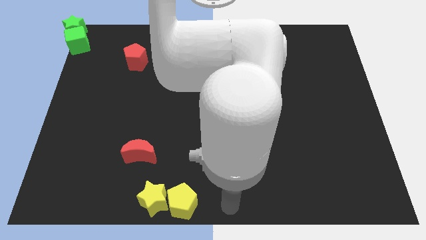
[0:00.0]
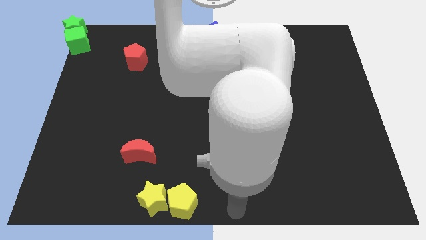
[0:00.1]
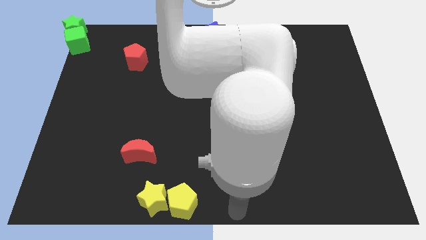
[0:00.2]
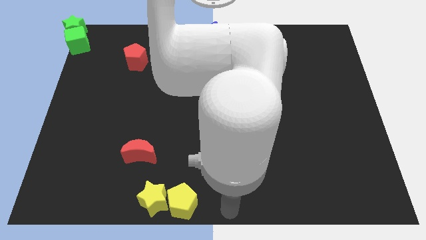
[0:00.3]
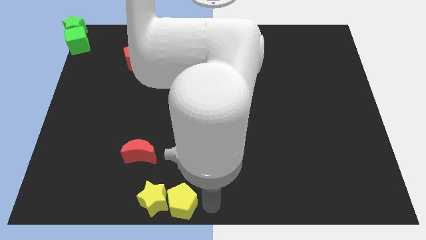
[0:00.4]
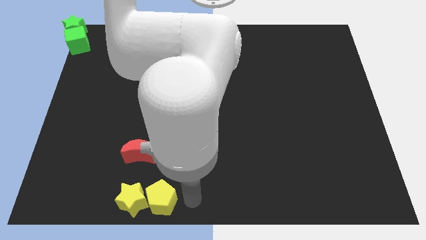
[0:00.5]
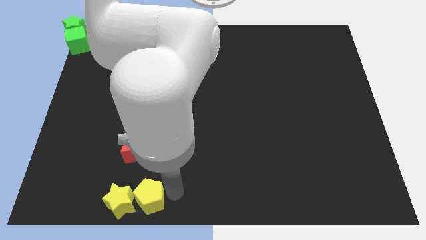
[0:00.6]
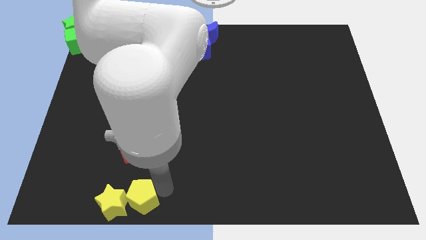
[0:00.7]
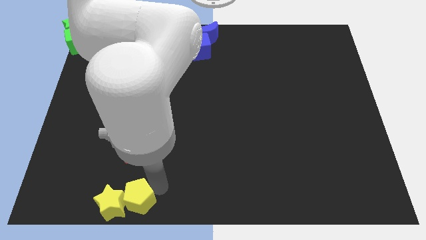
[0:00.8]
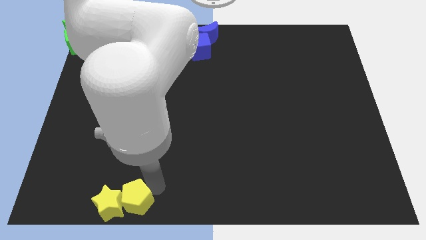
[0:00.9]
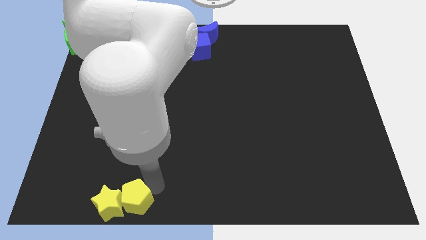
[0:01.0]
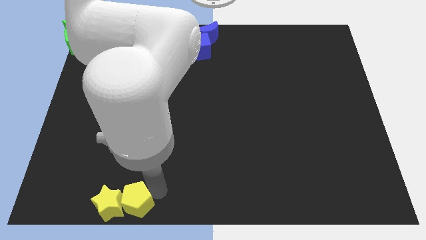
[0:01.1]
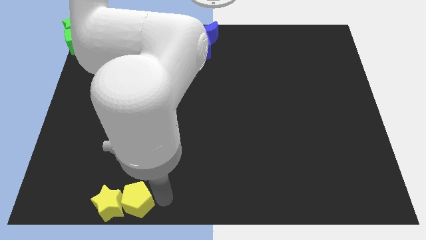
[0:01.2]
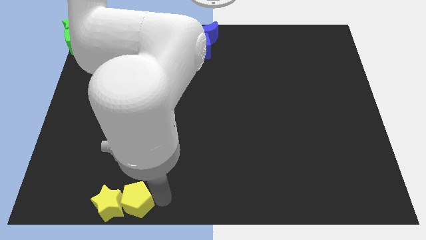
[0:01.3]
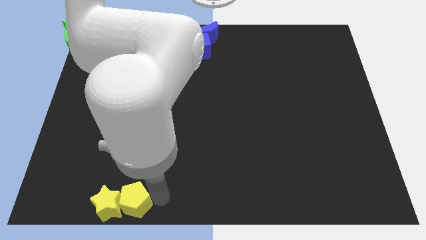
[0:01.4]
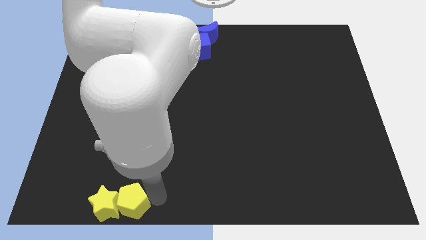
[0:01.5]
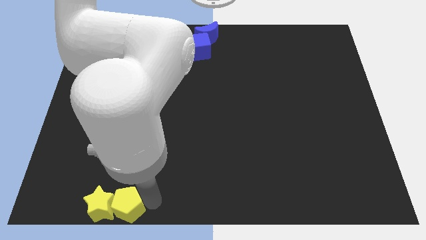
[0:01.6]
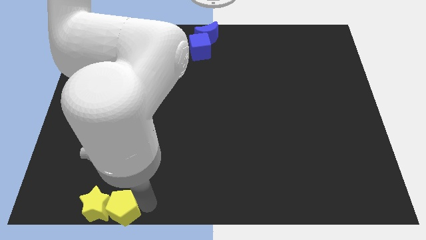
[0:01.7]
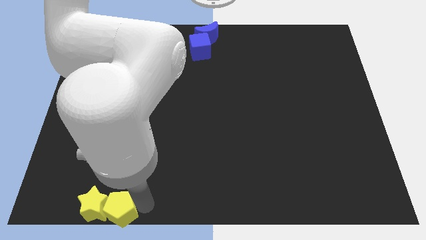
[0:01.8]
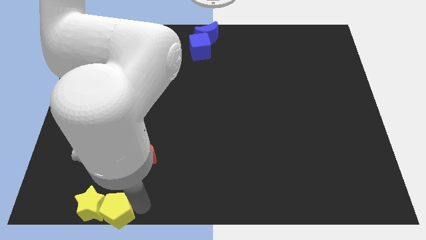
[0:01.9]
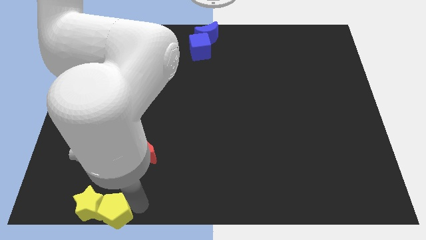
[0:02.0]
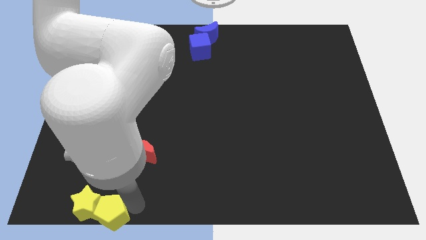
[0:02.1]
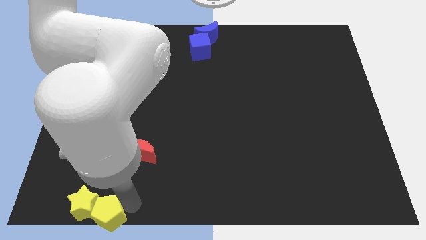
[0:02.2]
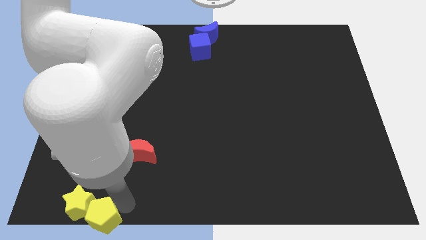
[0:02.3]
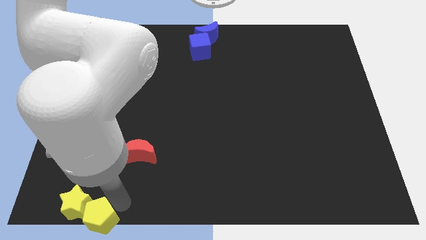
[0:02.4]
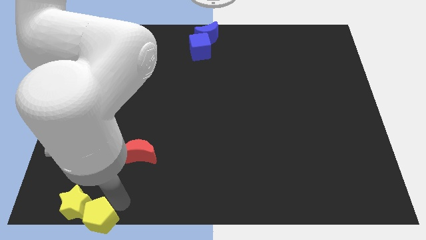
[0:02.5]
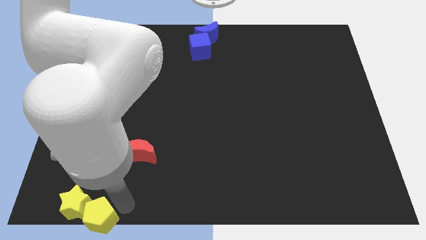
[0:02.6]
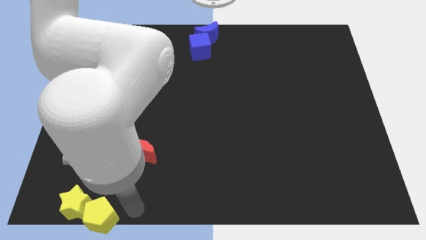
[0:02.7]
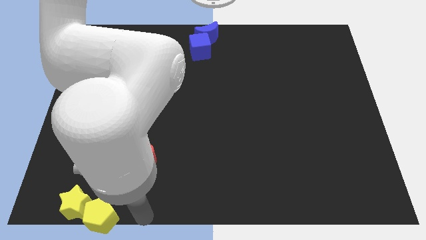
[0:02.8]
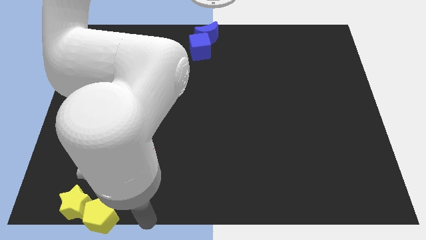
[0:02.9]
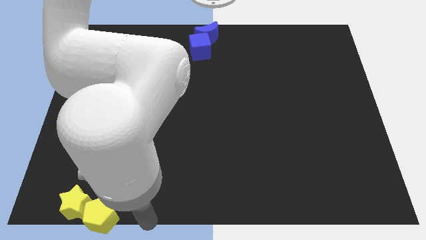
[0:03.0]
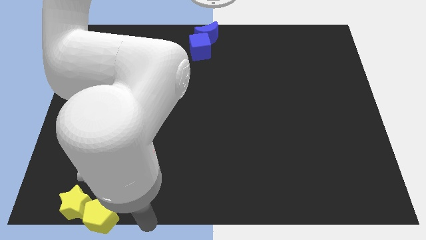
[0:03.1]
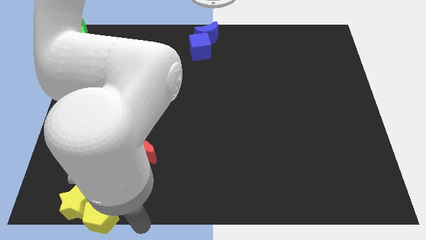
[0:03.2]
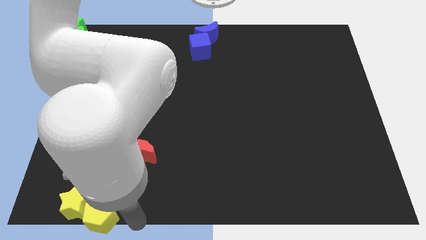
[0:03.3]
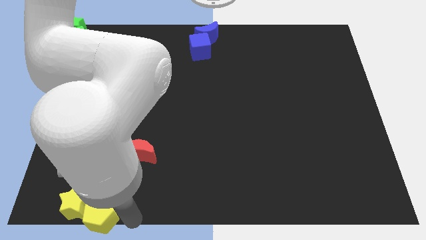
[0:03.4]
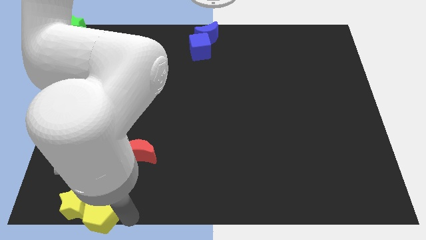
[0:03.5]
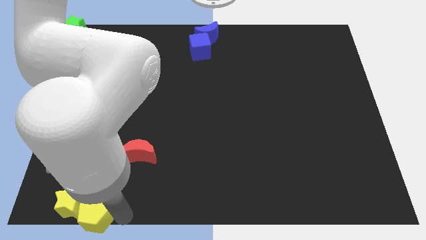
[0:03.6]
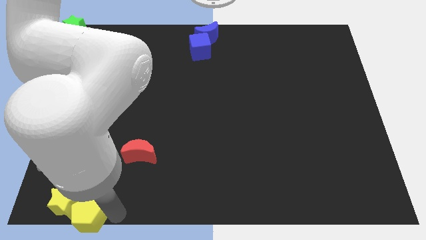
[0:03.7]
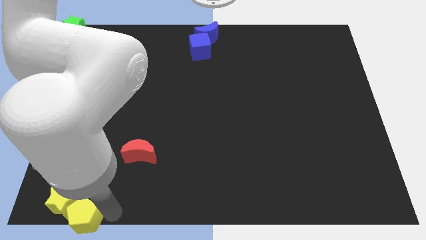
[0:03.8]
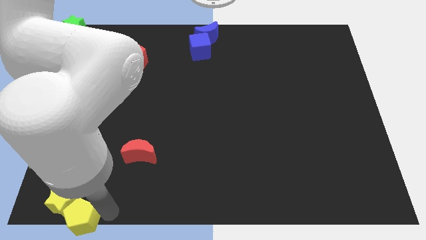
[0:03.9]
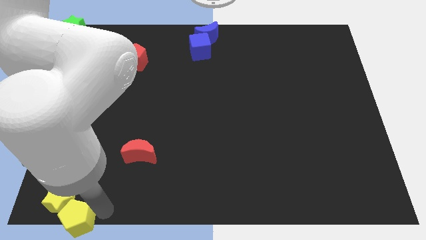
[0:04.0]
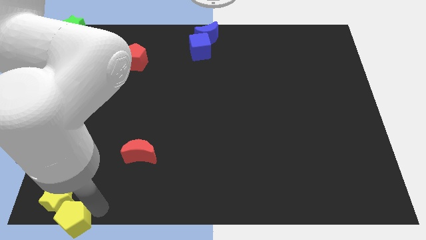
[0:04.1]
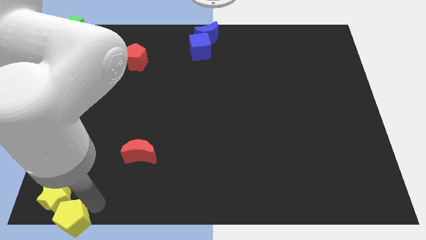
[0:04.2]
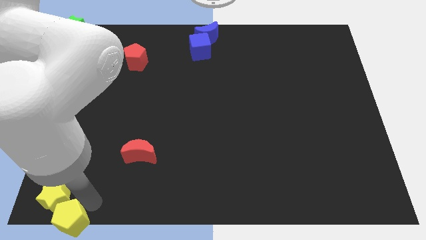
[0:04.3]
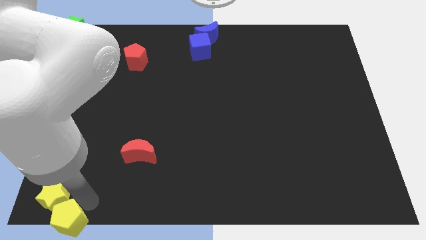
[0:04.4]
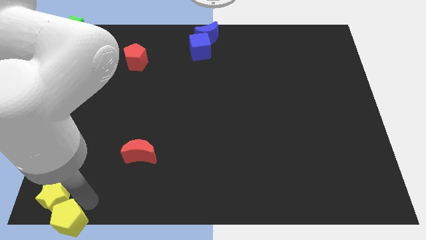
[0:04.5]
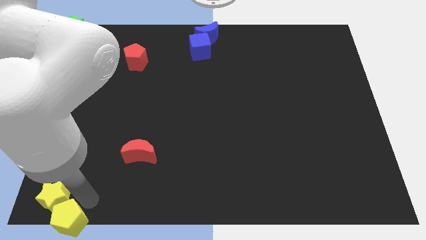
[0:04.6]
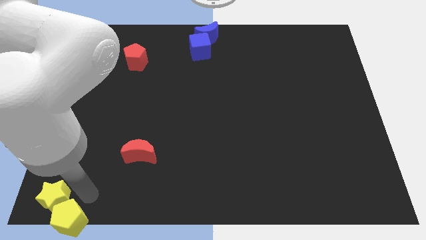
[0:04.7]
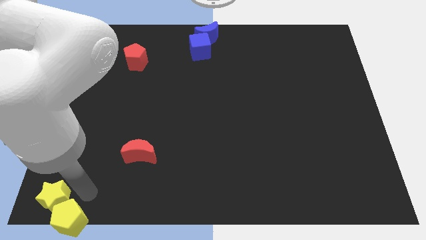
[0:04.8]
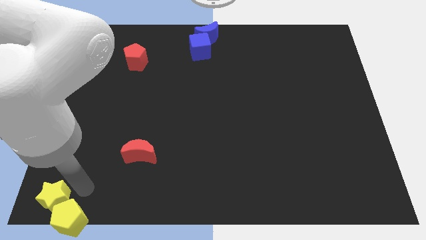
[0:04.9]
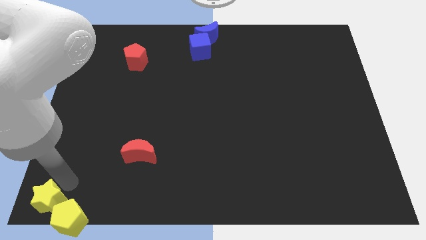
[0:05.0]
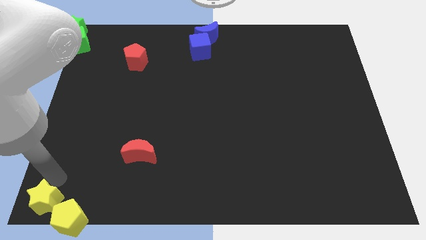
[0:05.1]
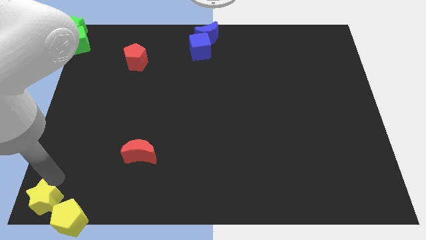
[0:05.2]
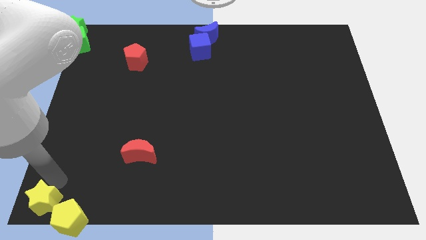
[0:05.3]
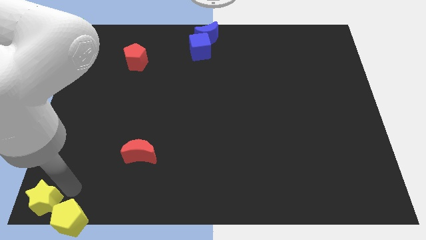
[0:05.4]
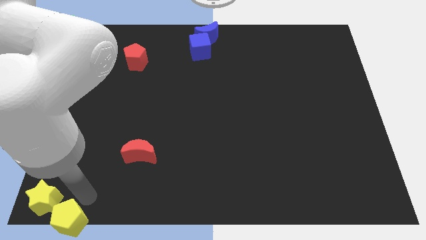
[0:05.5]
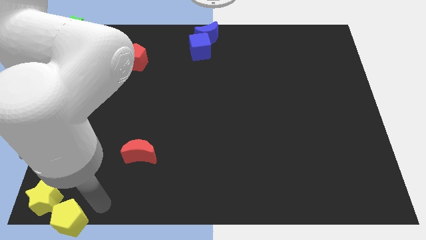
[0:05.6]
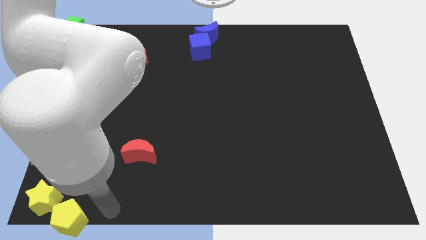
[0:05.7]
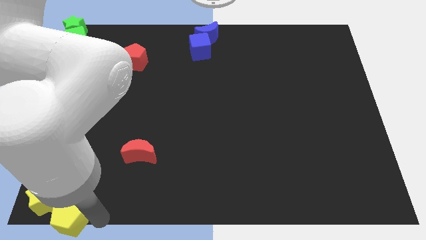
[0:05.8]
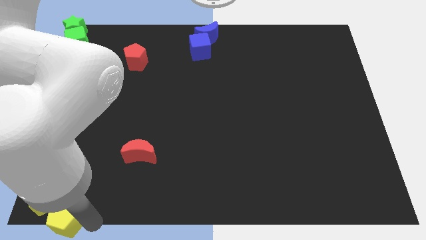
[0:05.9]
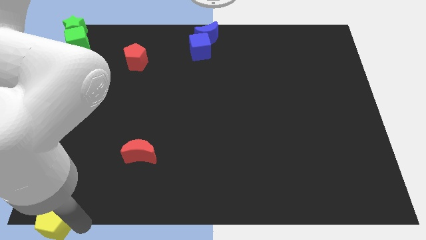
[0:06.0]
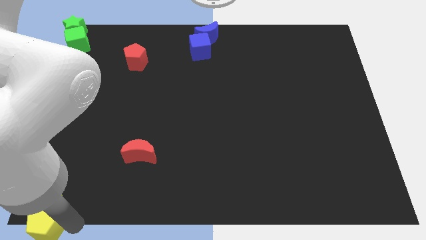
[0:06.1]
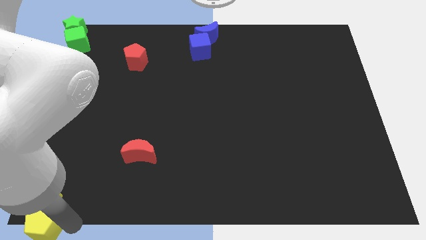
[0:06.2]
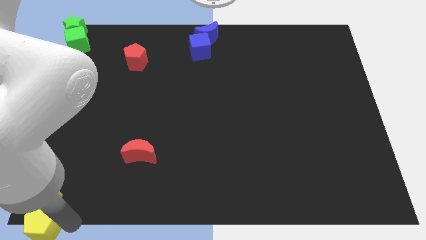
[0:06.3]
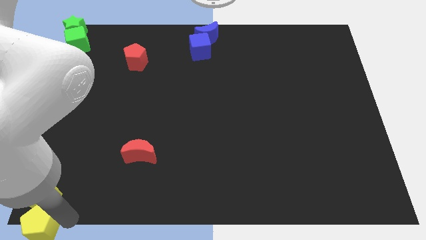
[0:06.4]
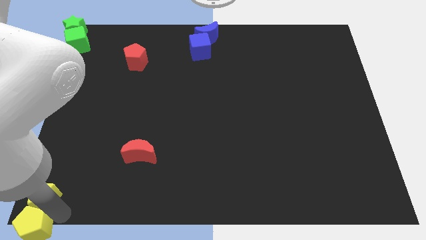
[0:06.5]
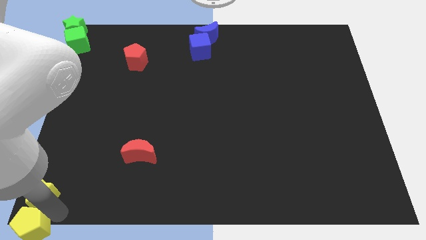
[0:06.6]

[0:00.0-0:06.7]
place the yellow blocks to the bottom left of the board

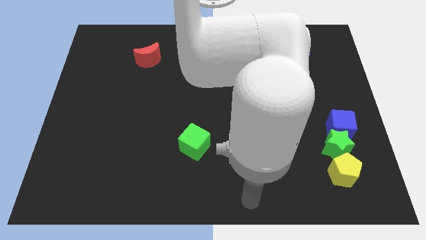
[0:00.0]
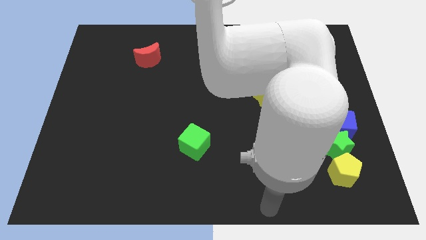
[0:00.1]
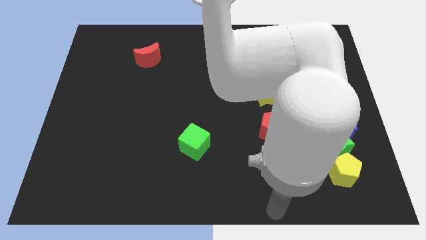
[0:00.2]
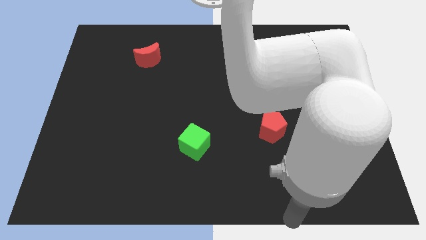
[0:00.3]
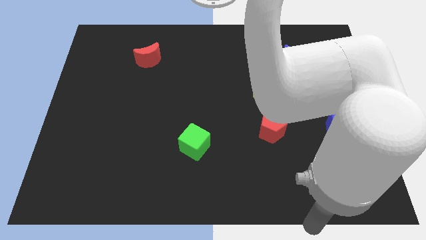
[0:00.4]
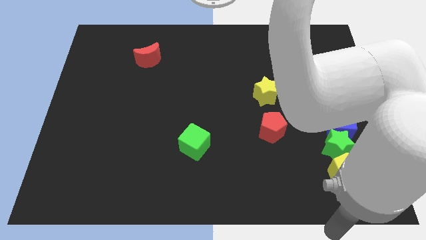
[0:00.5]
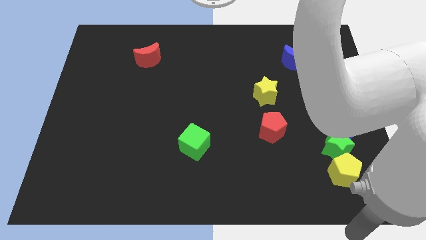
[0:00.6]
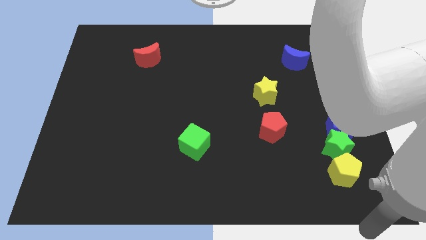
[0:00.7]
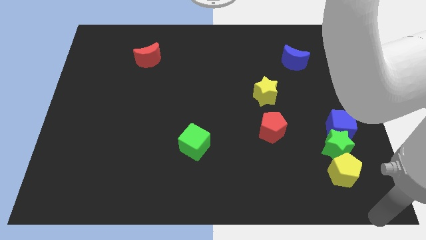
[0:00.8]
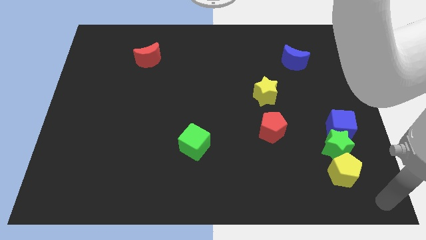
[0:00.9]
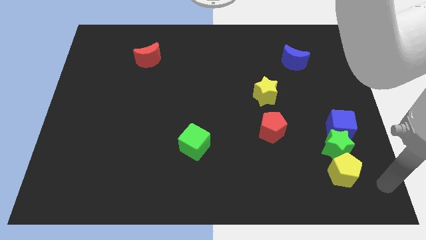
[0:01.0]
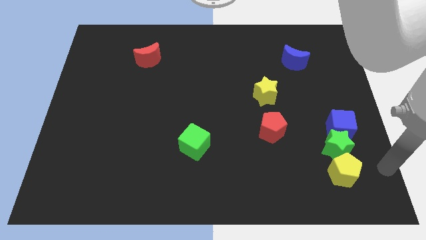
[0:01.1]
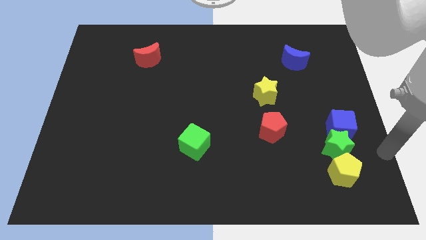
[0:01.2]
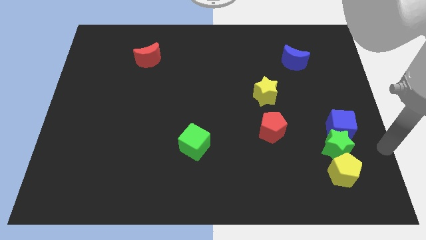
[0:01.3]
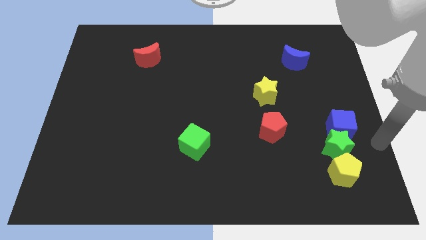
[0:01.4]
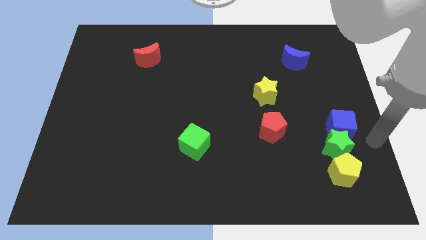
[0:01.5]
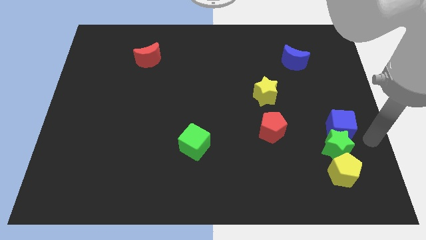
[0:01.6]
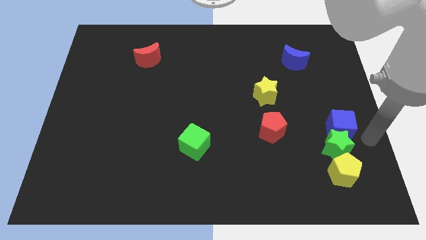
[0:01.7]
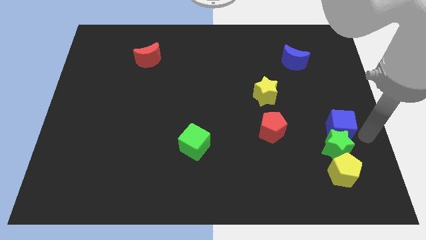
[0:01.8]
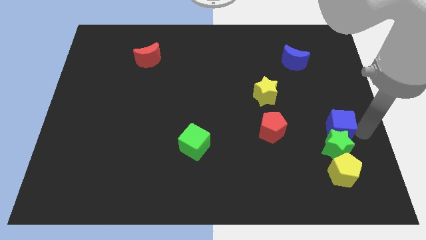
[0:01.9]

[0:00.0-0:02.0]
move your arm to the right of the blue cube

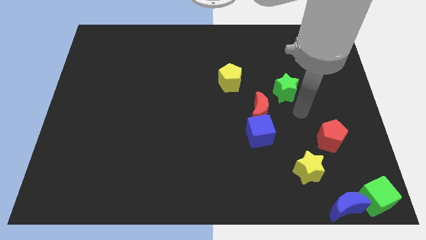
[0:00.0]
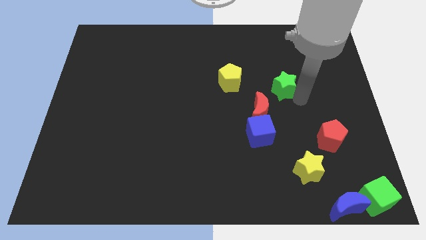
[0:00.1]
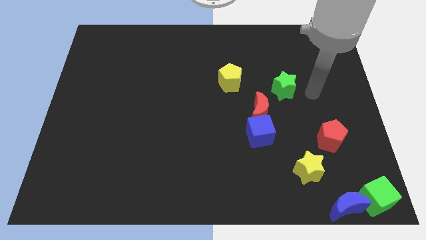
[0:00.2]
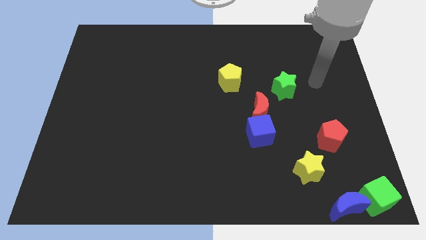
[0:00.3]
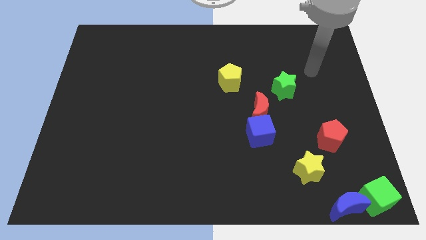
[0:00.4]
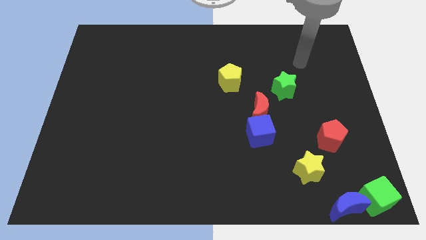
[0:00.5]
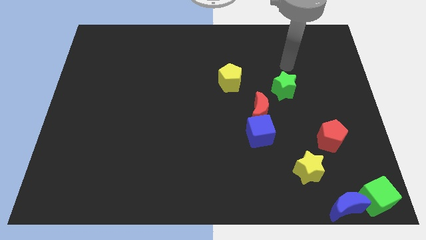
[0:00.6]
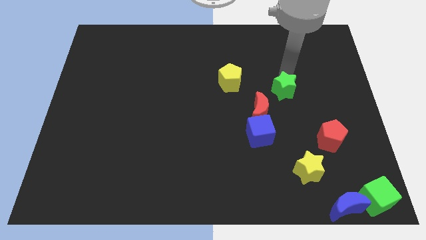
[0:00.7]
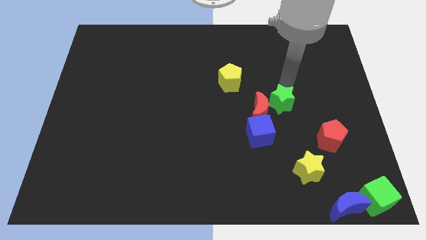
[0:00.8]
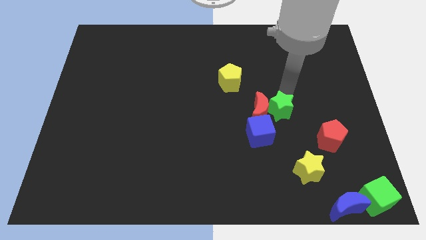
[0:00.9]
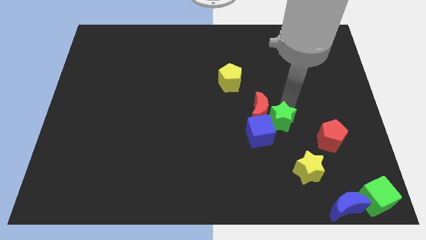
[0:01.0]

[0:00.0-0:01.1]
slide green star into blue cube
